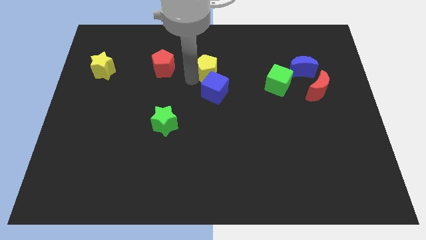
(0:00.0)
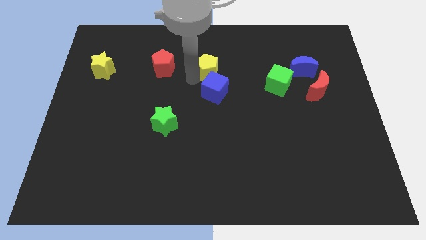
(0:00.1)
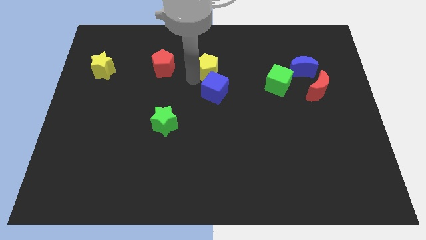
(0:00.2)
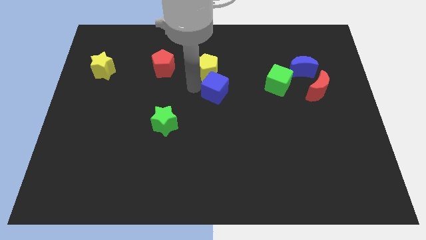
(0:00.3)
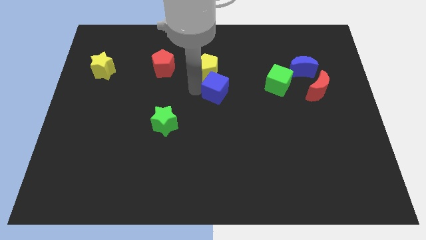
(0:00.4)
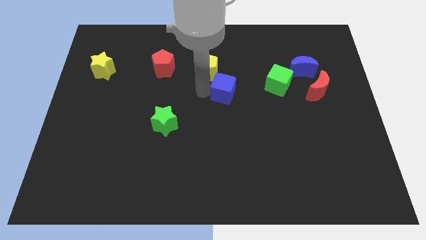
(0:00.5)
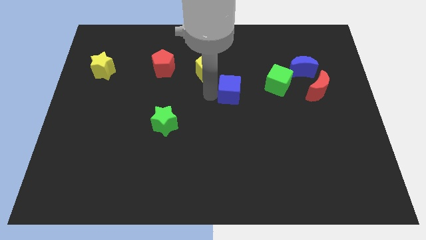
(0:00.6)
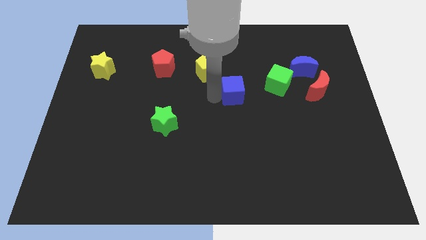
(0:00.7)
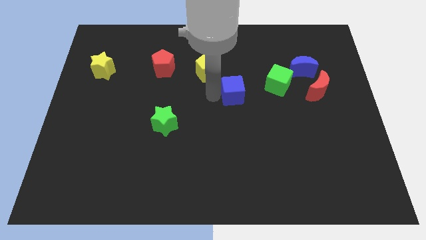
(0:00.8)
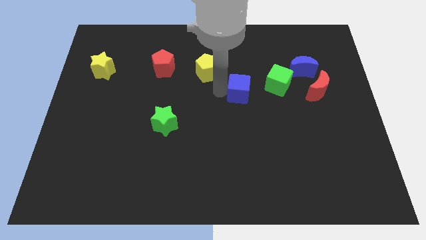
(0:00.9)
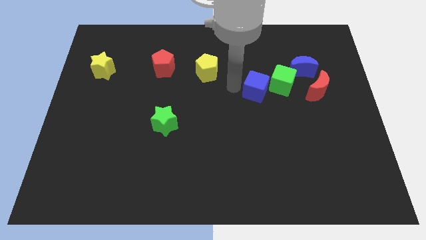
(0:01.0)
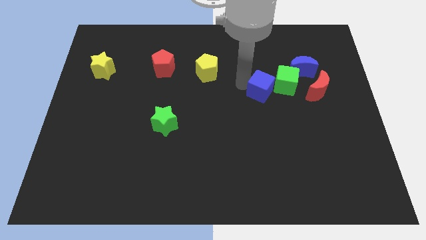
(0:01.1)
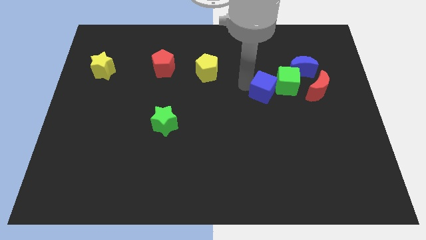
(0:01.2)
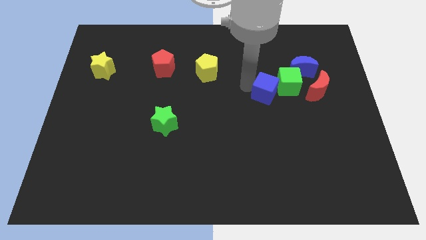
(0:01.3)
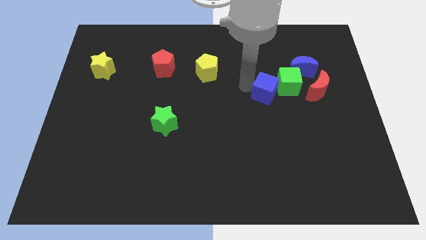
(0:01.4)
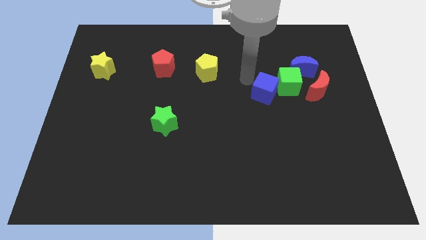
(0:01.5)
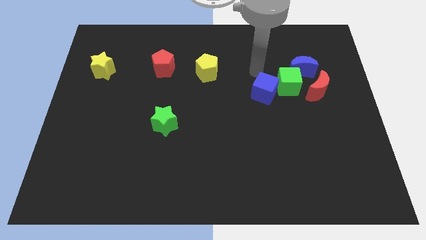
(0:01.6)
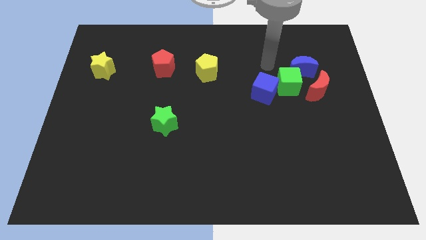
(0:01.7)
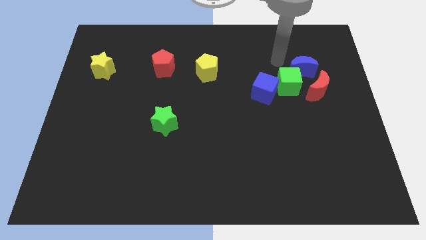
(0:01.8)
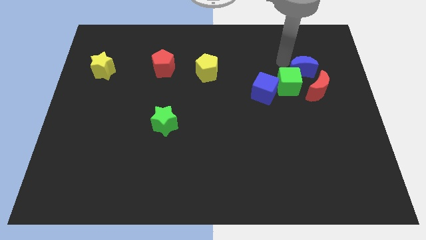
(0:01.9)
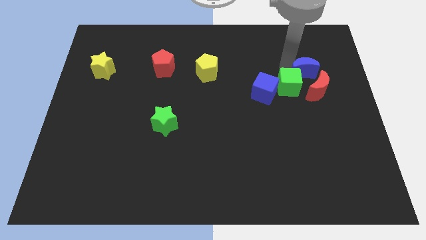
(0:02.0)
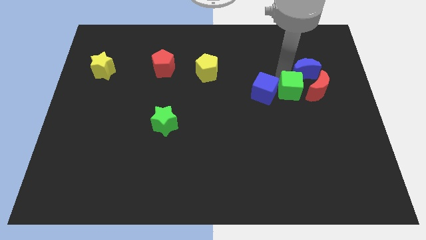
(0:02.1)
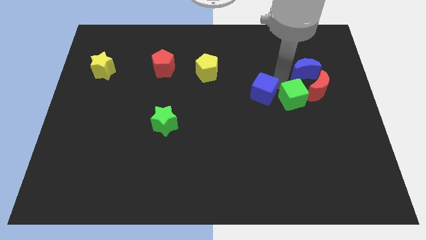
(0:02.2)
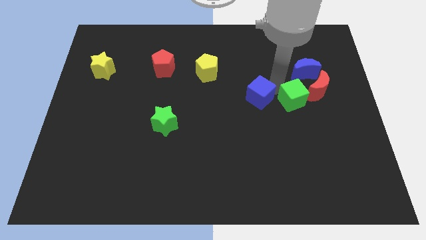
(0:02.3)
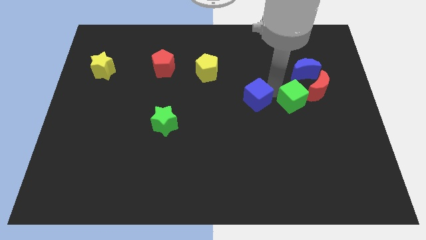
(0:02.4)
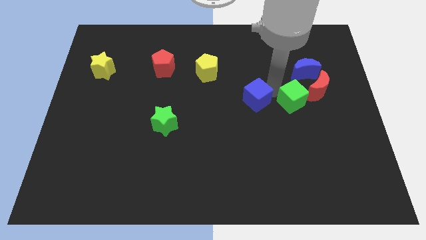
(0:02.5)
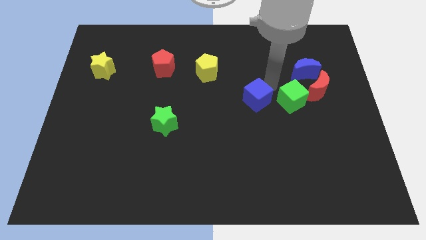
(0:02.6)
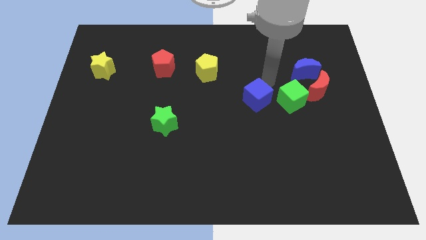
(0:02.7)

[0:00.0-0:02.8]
push the blue cube to the center

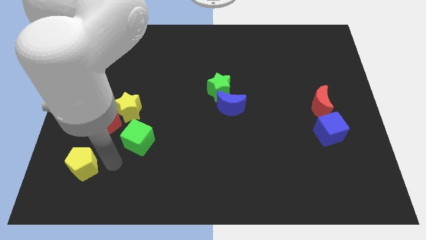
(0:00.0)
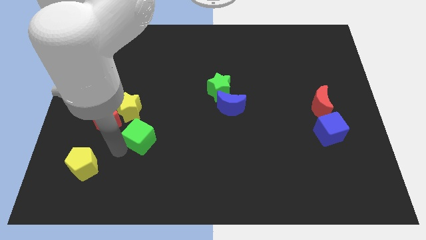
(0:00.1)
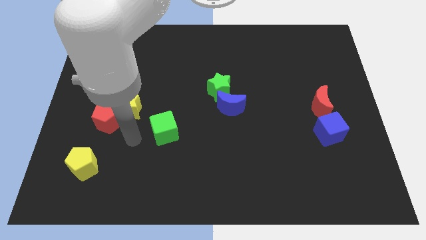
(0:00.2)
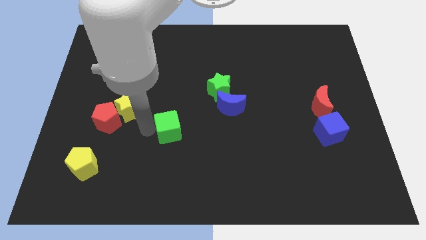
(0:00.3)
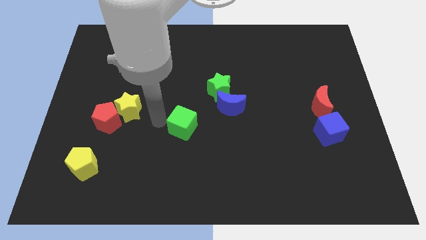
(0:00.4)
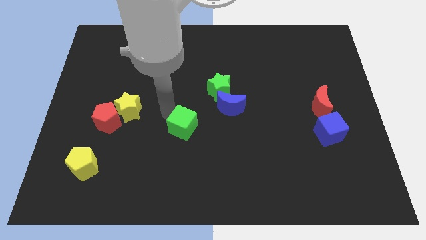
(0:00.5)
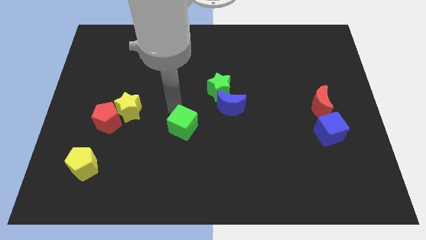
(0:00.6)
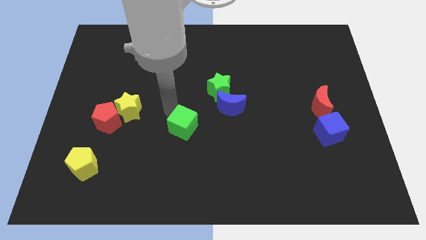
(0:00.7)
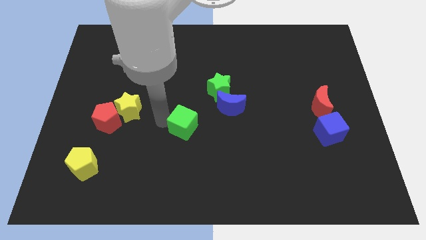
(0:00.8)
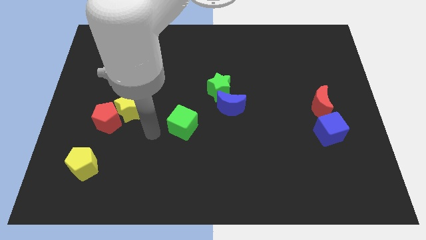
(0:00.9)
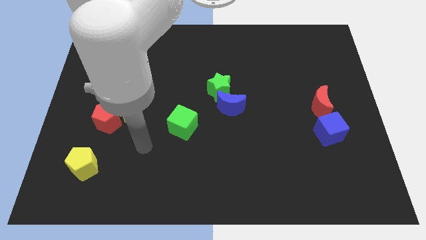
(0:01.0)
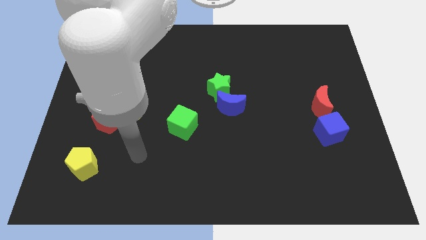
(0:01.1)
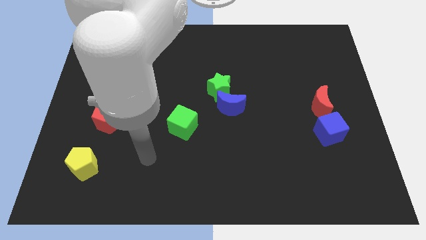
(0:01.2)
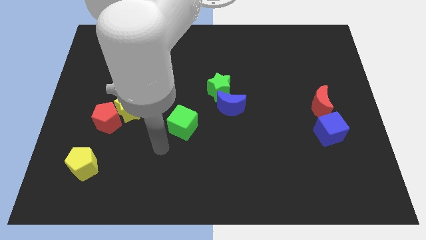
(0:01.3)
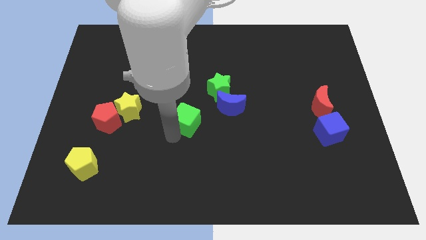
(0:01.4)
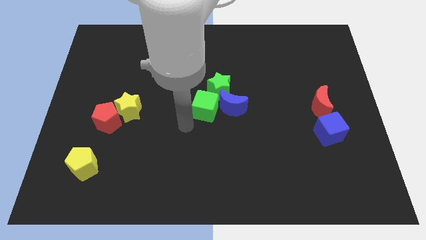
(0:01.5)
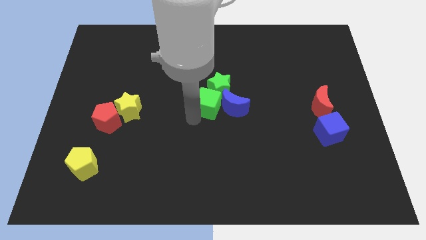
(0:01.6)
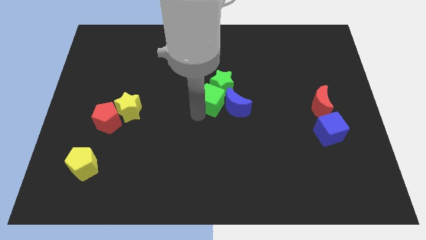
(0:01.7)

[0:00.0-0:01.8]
move the green cube to the left of the blue moon

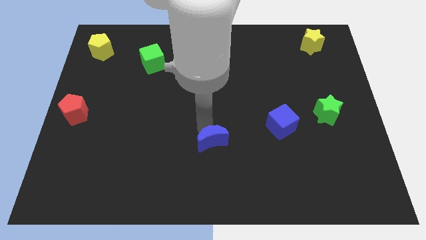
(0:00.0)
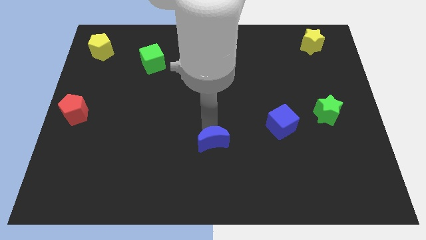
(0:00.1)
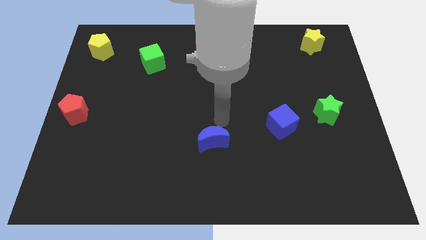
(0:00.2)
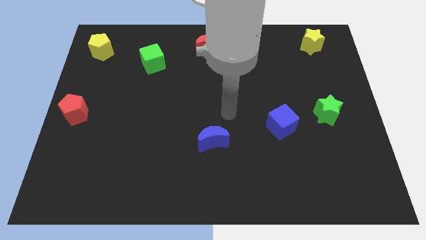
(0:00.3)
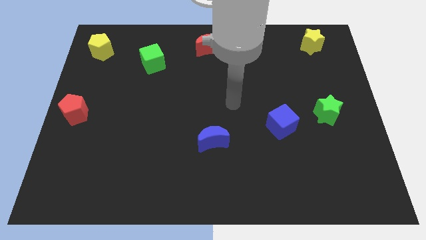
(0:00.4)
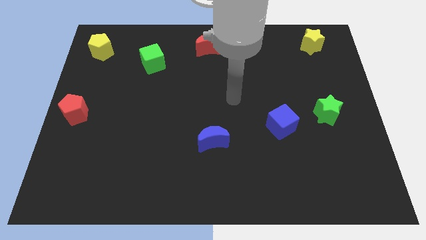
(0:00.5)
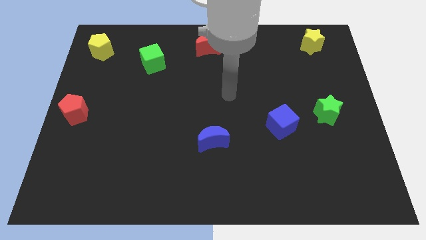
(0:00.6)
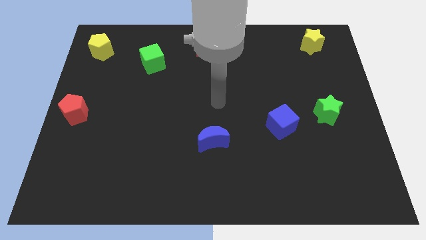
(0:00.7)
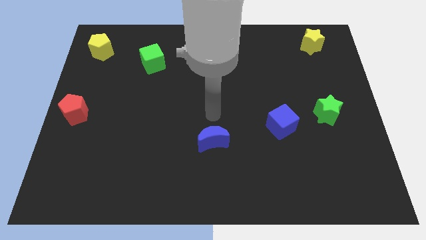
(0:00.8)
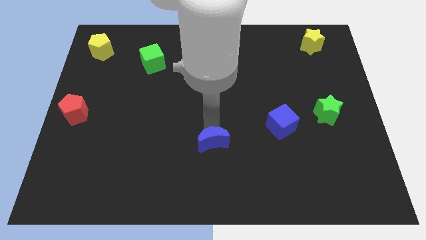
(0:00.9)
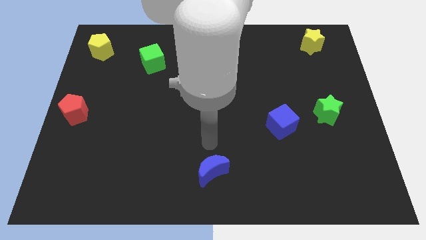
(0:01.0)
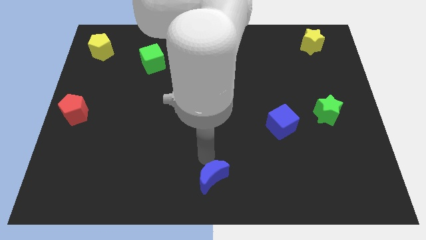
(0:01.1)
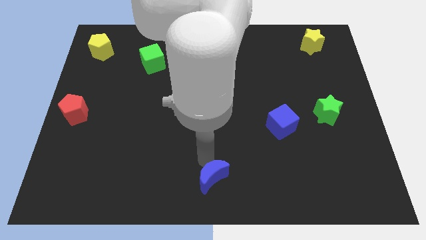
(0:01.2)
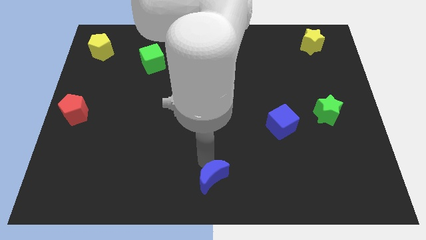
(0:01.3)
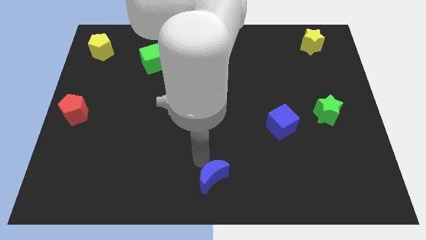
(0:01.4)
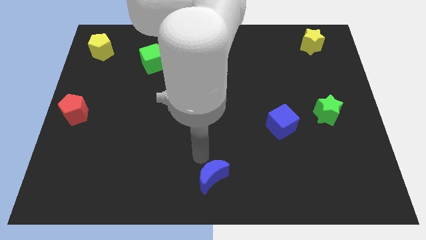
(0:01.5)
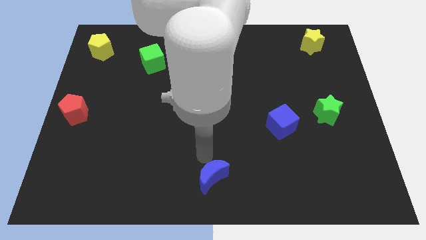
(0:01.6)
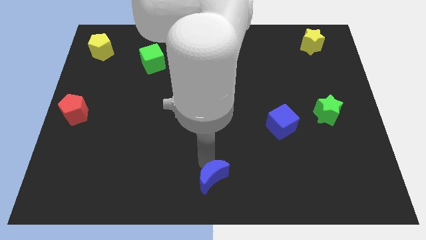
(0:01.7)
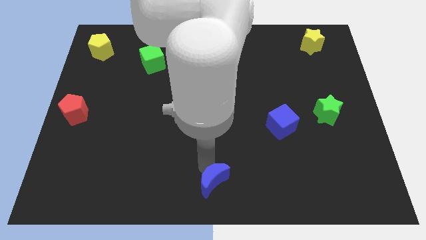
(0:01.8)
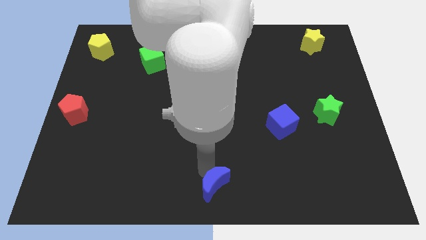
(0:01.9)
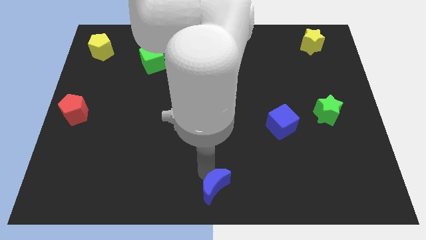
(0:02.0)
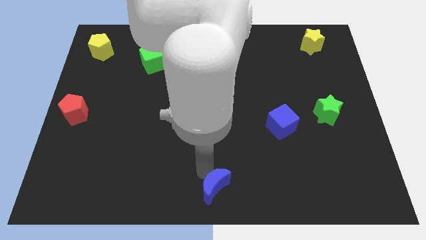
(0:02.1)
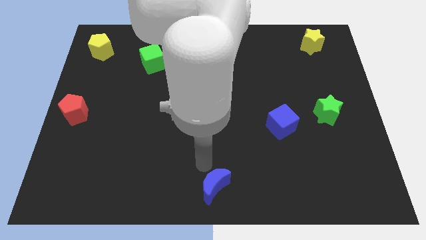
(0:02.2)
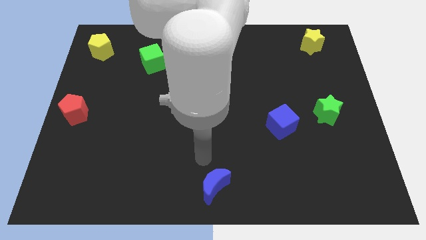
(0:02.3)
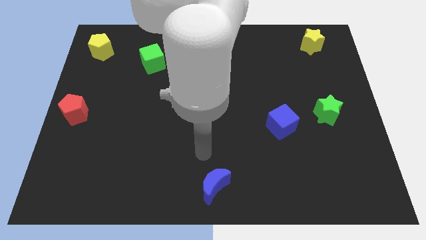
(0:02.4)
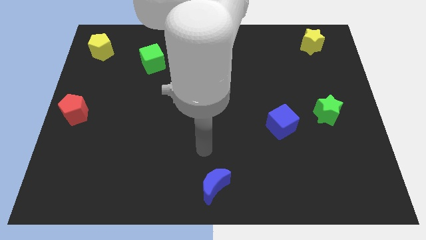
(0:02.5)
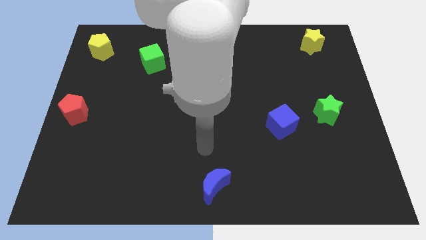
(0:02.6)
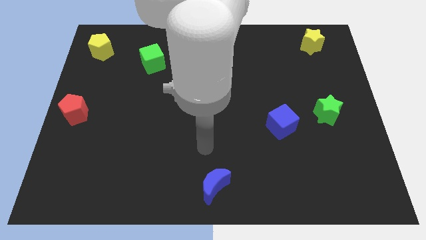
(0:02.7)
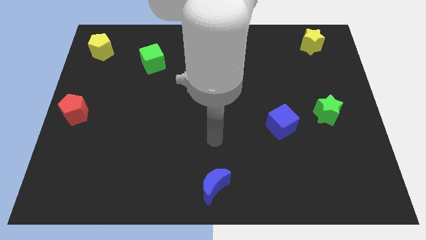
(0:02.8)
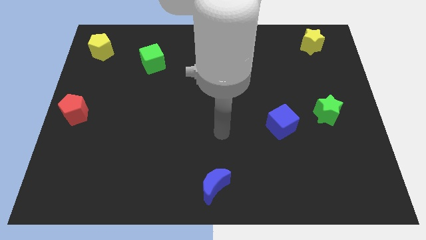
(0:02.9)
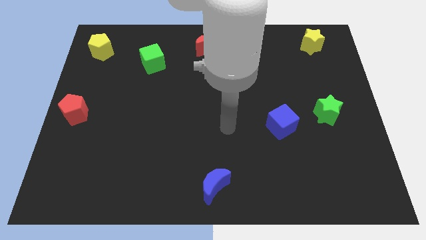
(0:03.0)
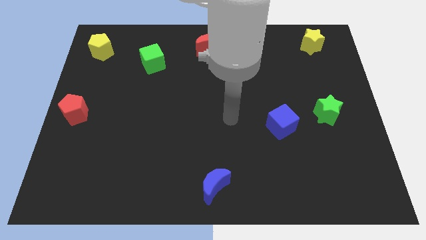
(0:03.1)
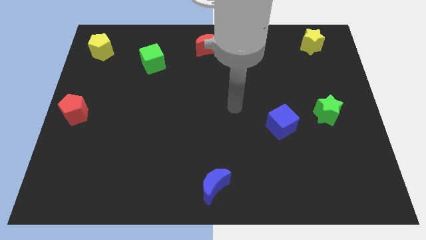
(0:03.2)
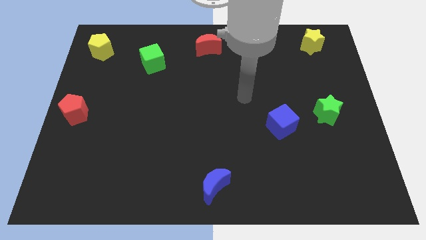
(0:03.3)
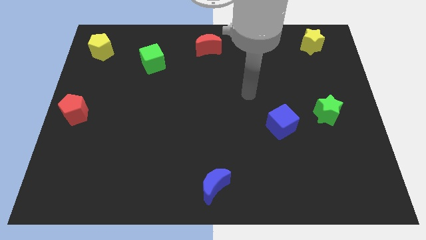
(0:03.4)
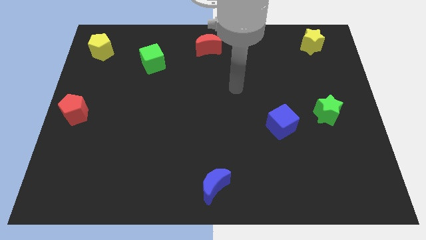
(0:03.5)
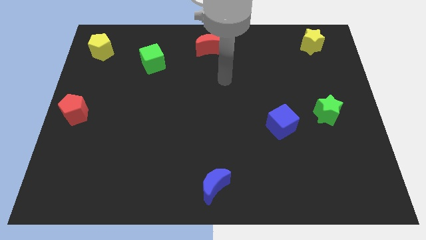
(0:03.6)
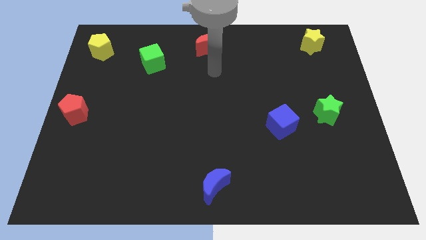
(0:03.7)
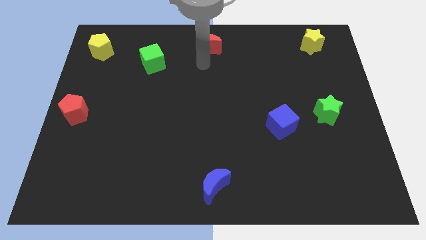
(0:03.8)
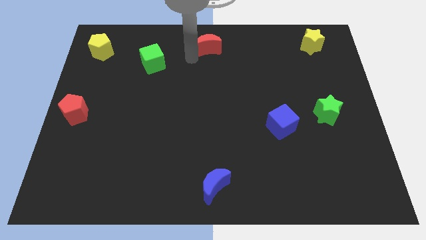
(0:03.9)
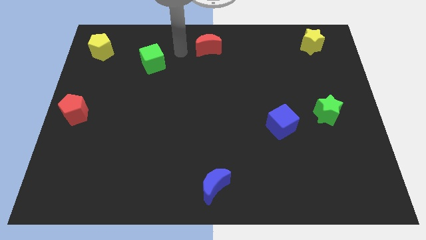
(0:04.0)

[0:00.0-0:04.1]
move the blue crescent to the bottom center

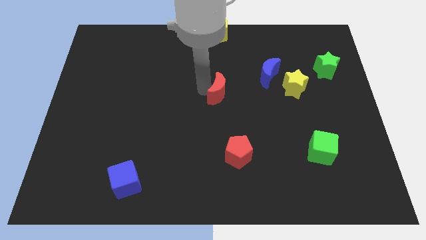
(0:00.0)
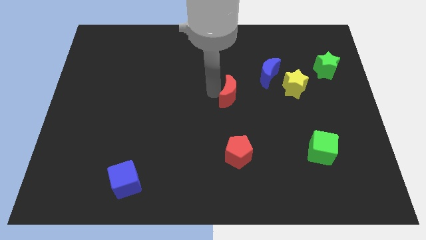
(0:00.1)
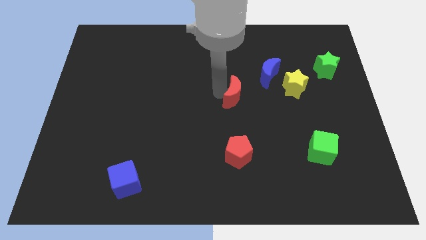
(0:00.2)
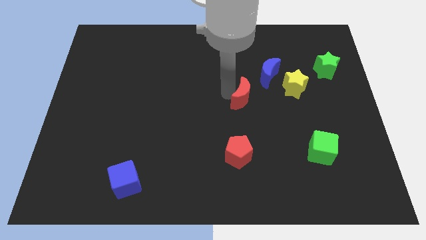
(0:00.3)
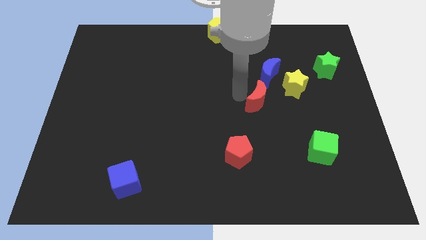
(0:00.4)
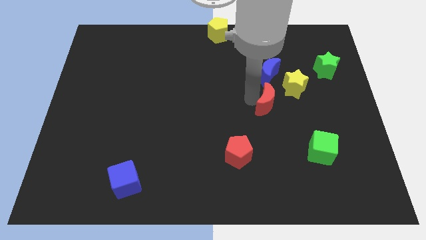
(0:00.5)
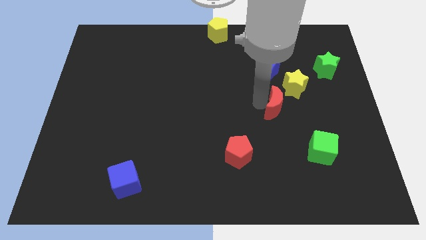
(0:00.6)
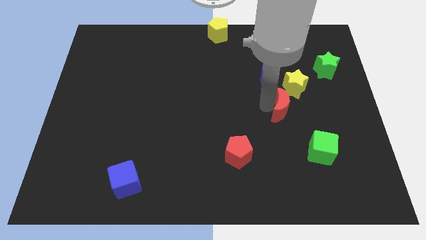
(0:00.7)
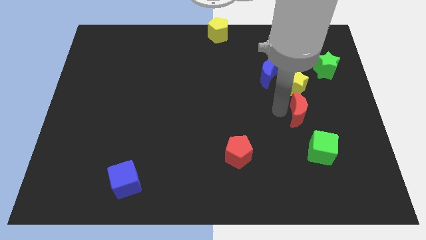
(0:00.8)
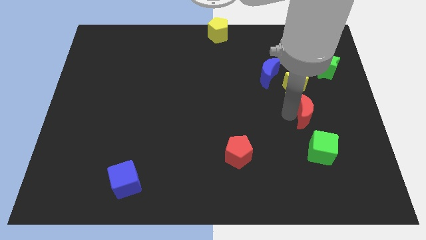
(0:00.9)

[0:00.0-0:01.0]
place red moon below yellow star
